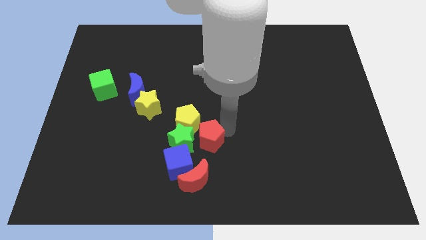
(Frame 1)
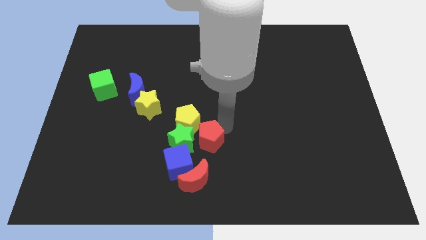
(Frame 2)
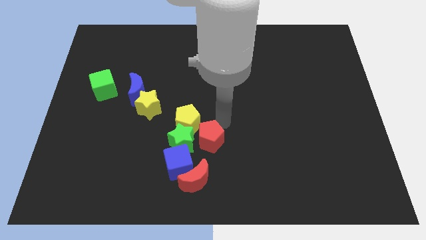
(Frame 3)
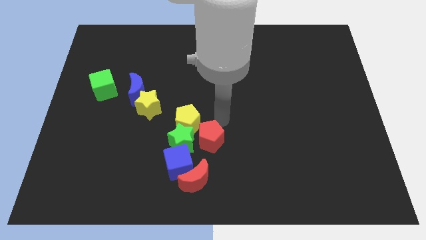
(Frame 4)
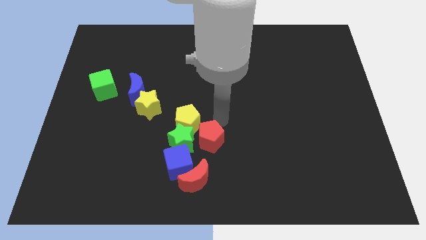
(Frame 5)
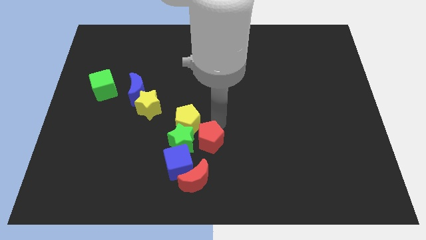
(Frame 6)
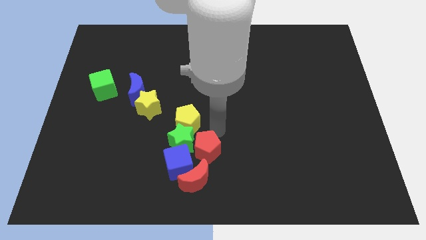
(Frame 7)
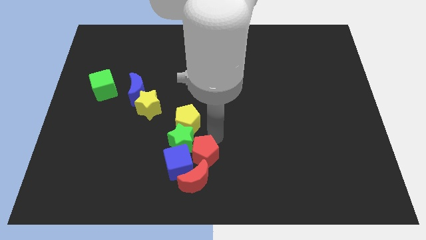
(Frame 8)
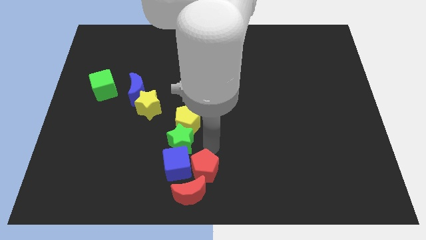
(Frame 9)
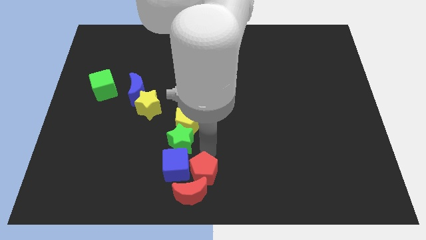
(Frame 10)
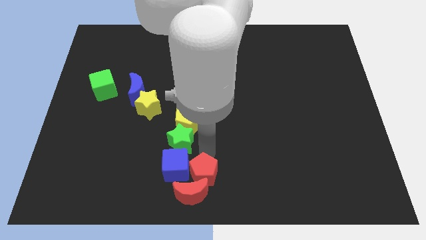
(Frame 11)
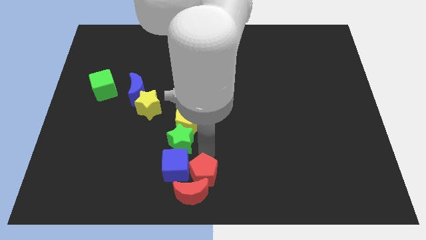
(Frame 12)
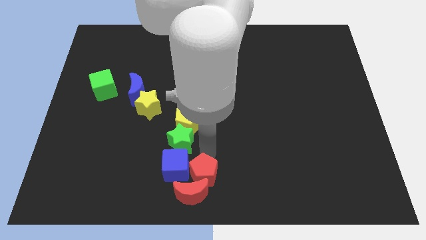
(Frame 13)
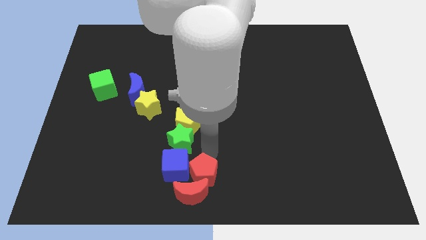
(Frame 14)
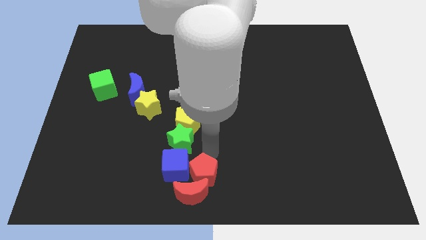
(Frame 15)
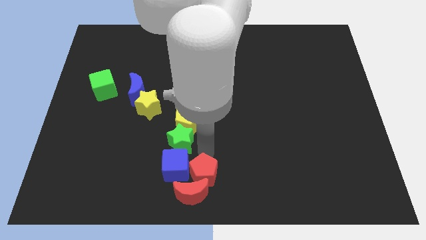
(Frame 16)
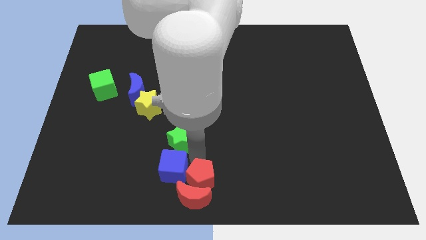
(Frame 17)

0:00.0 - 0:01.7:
move the red pentagon into the red crescent

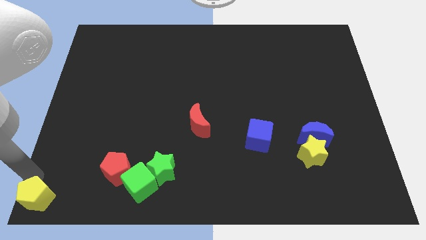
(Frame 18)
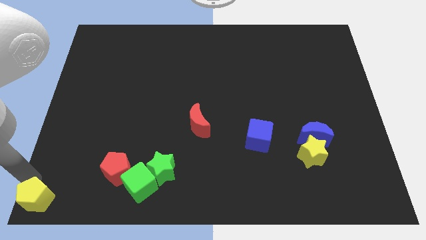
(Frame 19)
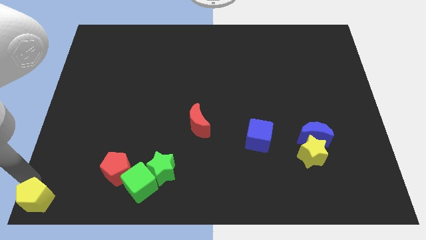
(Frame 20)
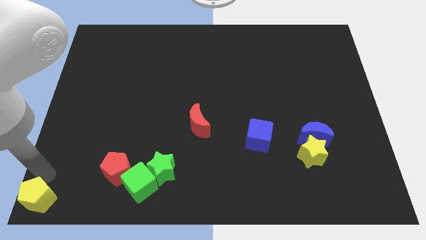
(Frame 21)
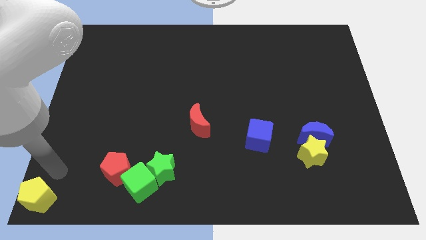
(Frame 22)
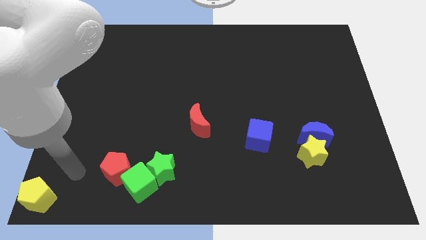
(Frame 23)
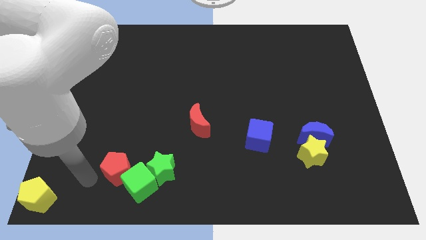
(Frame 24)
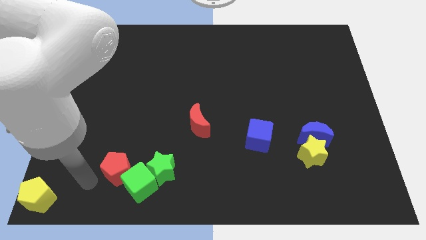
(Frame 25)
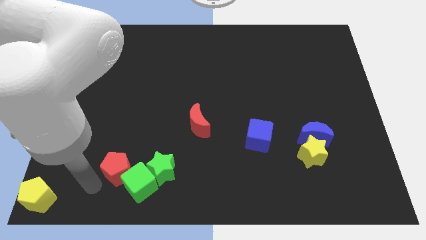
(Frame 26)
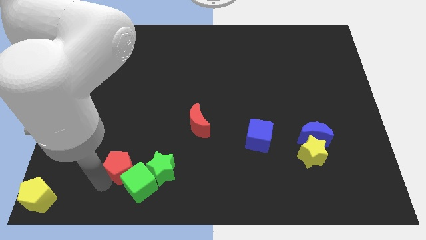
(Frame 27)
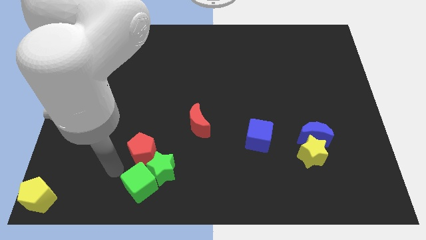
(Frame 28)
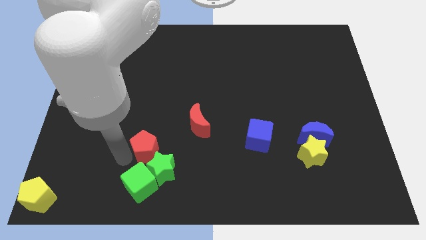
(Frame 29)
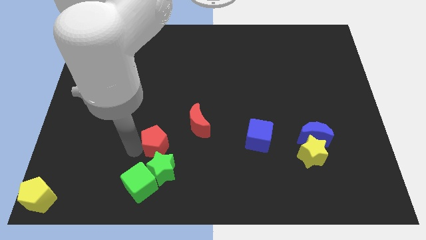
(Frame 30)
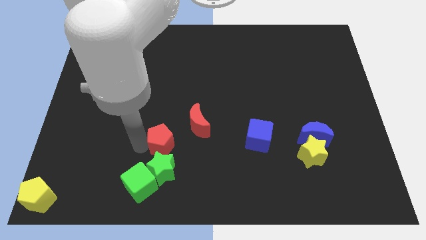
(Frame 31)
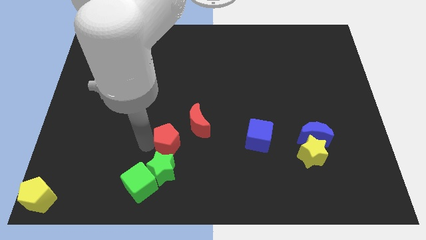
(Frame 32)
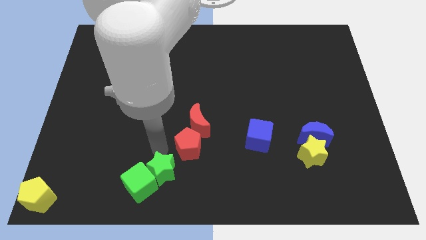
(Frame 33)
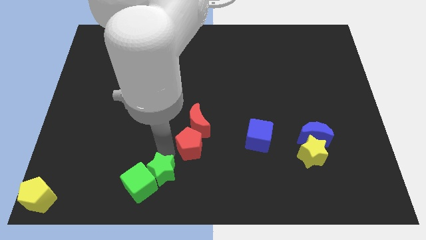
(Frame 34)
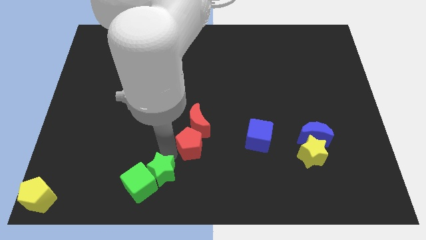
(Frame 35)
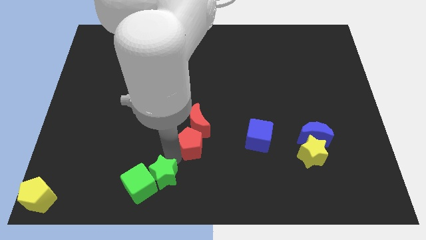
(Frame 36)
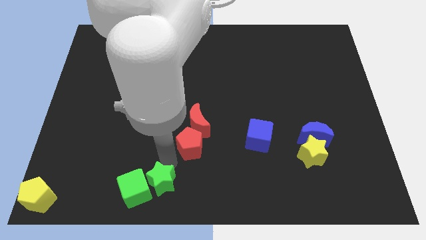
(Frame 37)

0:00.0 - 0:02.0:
push red pentagon below red moon

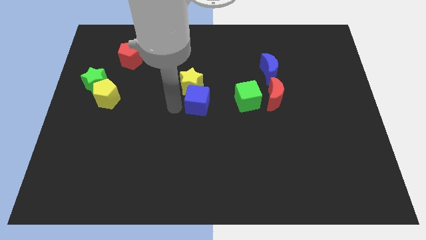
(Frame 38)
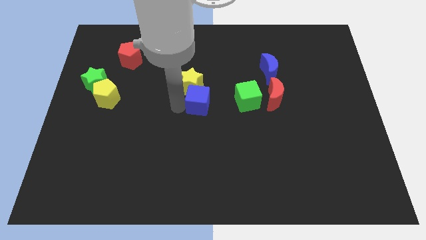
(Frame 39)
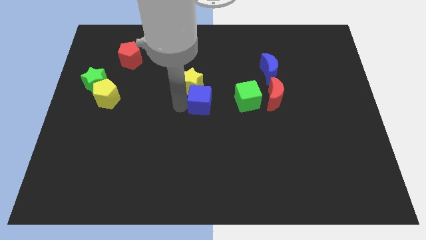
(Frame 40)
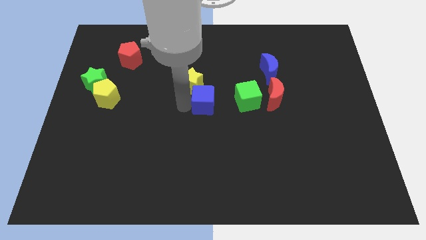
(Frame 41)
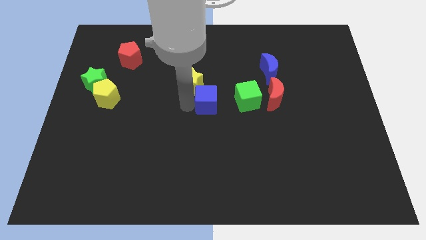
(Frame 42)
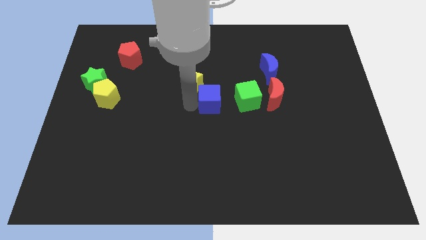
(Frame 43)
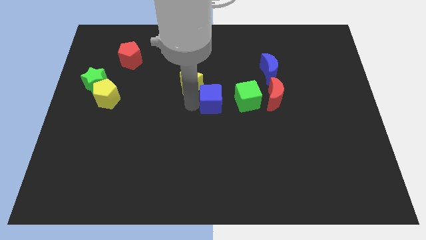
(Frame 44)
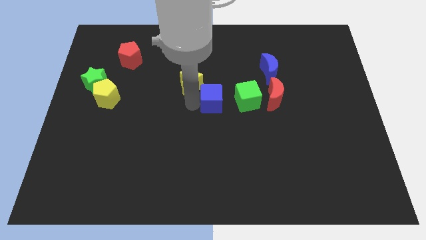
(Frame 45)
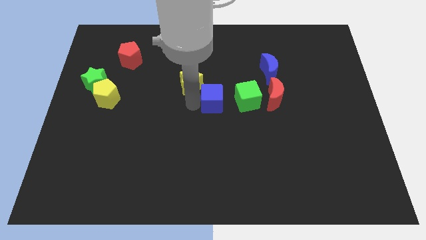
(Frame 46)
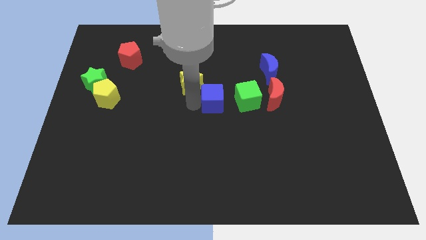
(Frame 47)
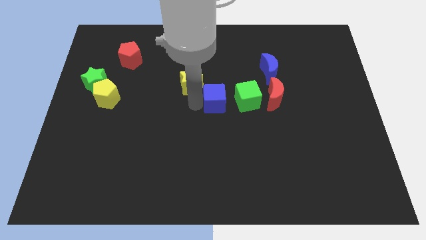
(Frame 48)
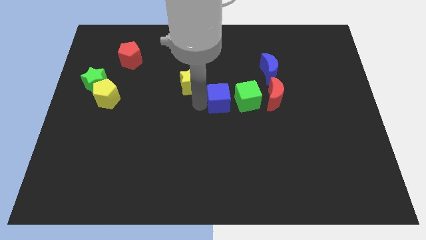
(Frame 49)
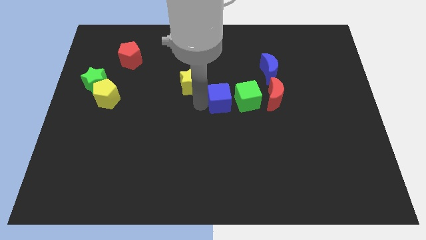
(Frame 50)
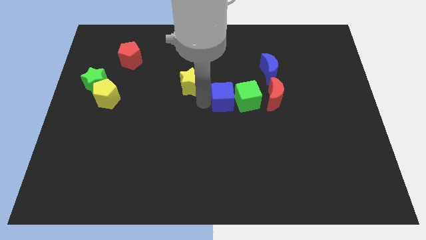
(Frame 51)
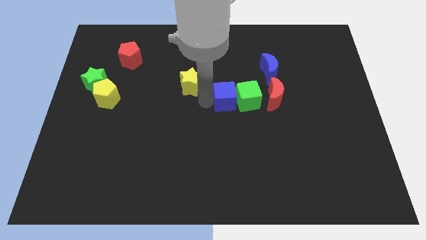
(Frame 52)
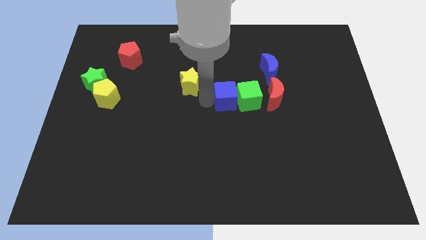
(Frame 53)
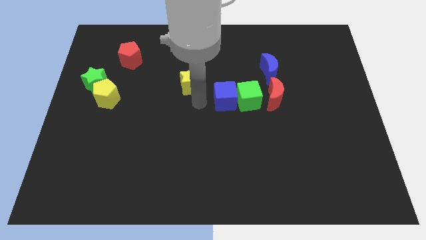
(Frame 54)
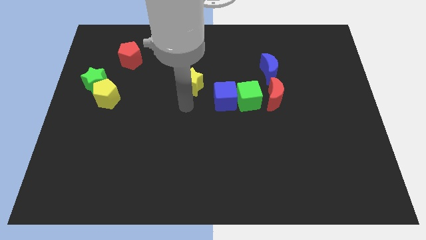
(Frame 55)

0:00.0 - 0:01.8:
move the blue cube into the green cube

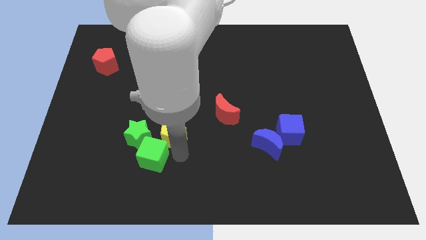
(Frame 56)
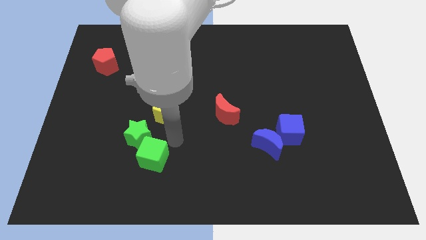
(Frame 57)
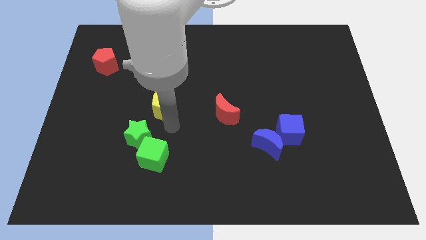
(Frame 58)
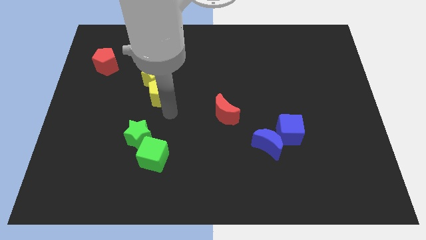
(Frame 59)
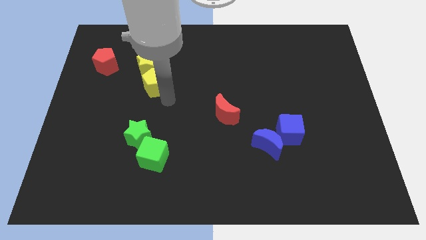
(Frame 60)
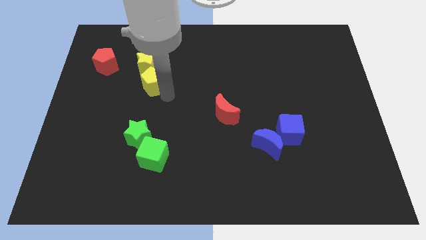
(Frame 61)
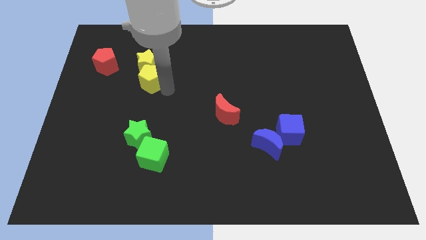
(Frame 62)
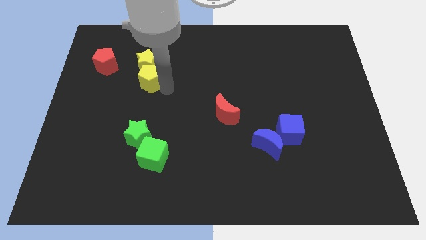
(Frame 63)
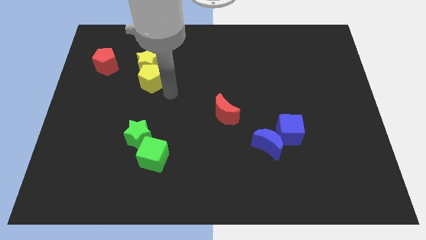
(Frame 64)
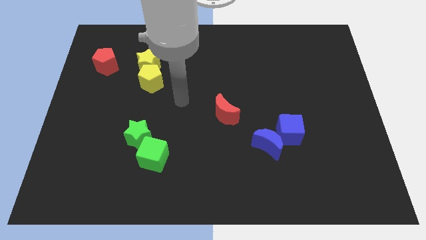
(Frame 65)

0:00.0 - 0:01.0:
place the yellow pentagon below the yellow star

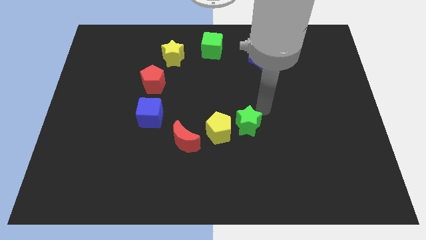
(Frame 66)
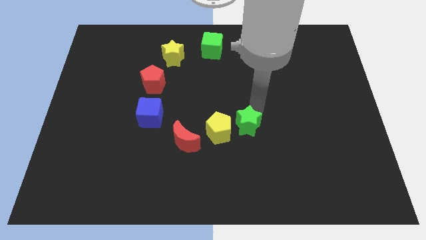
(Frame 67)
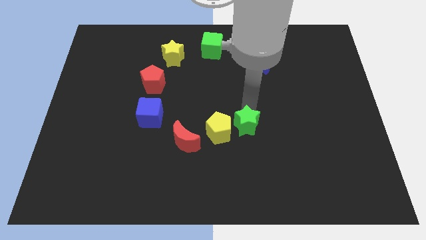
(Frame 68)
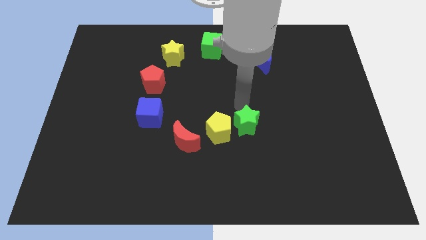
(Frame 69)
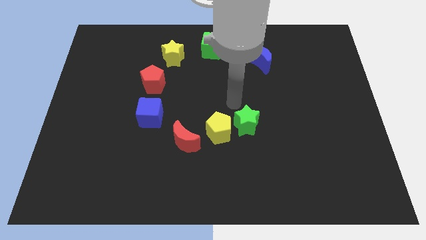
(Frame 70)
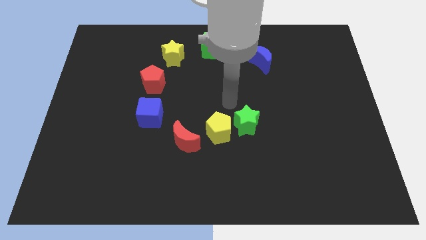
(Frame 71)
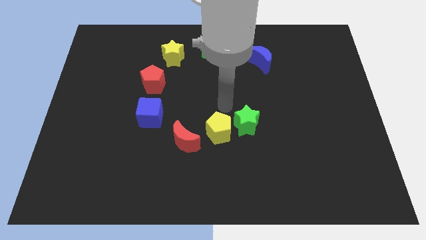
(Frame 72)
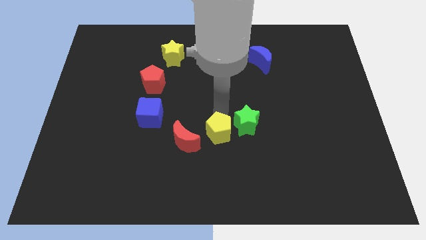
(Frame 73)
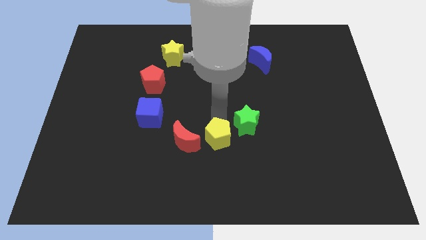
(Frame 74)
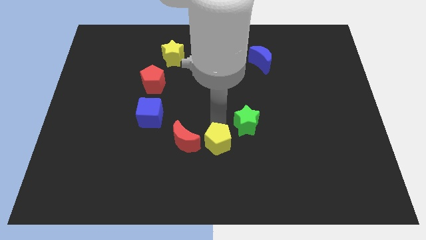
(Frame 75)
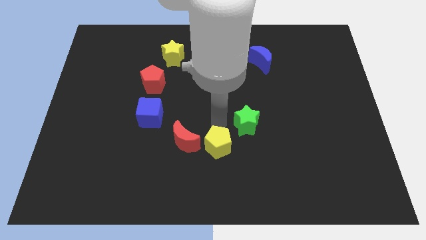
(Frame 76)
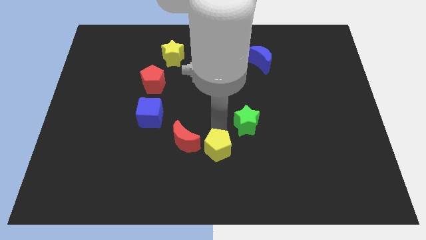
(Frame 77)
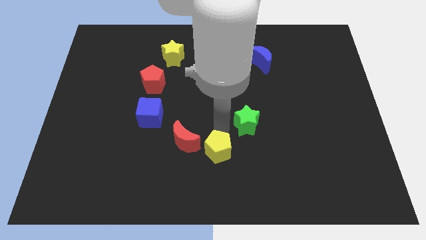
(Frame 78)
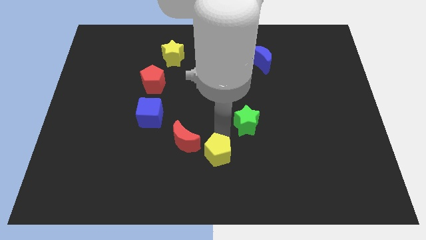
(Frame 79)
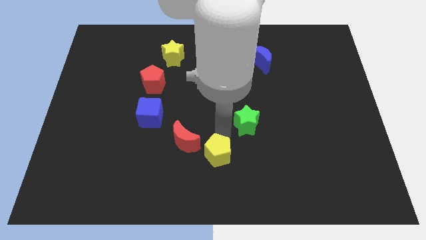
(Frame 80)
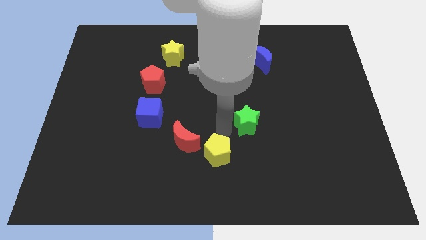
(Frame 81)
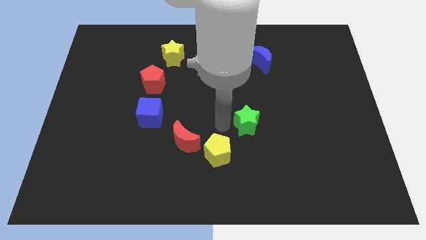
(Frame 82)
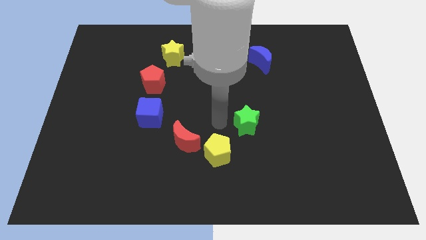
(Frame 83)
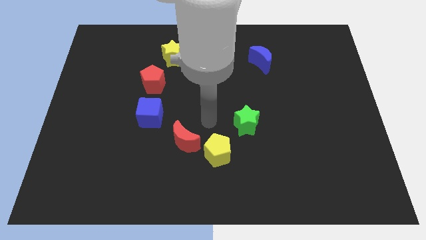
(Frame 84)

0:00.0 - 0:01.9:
place the yellow pentagon diagonally bottom left to the green star

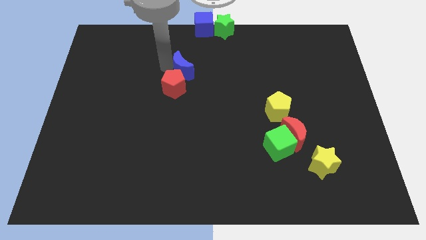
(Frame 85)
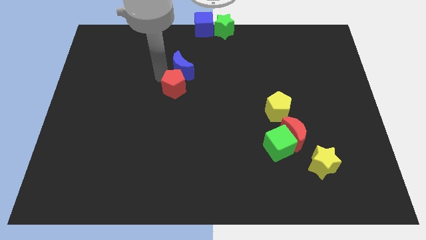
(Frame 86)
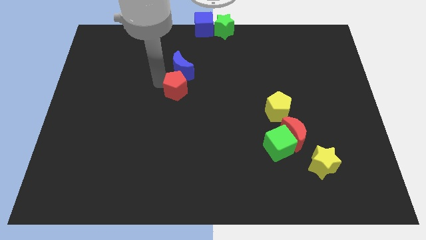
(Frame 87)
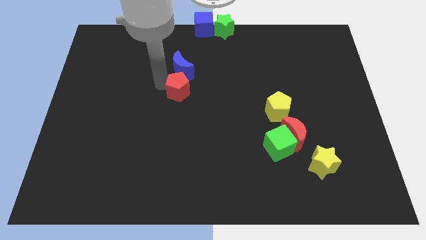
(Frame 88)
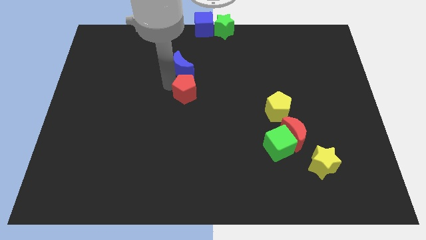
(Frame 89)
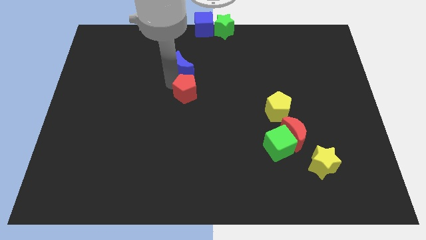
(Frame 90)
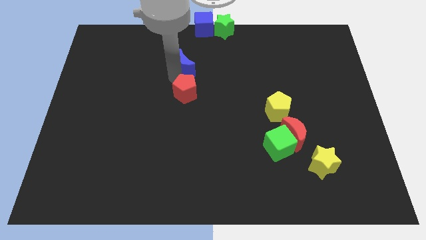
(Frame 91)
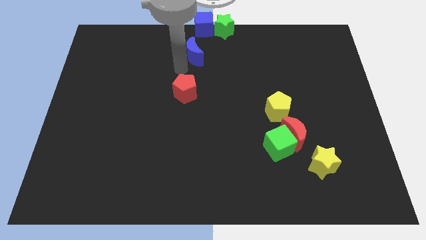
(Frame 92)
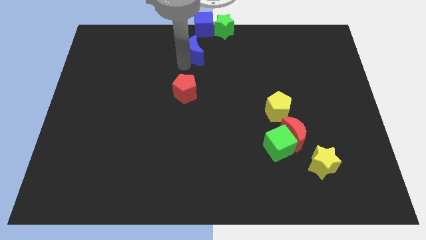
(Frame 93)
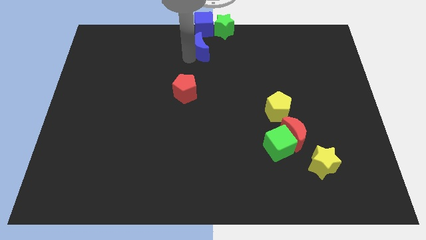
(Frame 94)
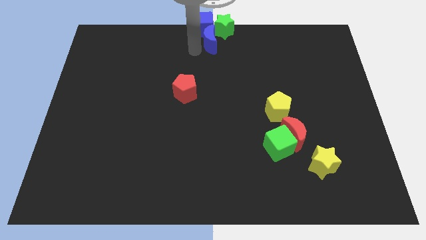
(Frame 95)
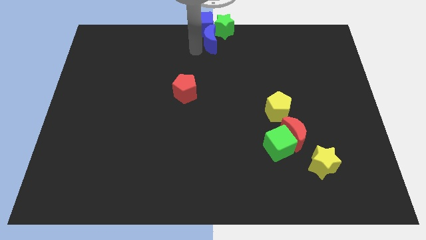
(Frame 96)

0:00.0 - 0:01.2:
separate the blue crescent from the red pentagon
